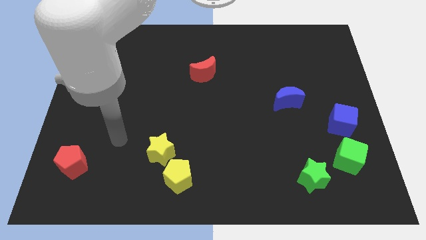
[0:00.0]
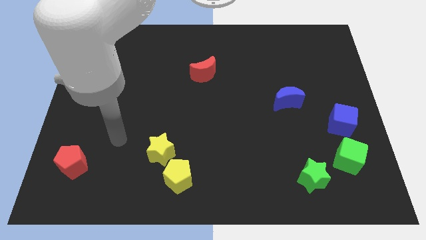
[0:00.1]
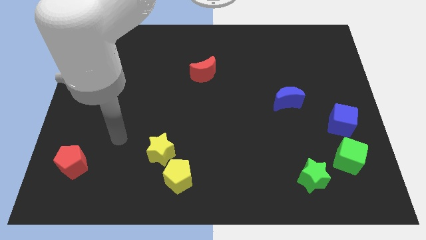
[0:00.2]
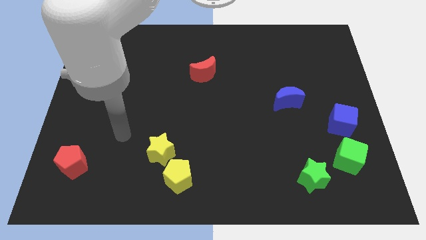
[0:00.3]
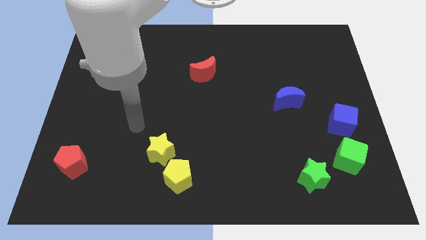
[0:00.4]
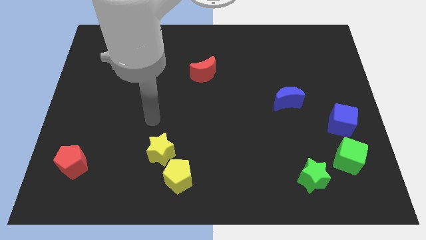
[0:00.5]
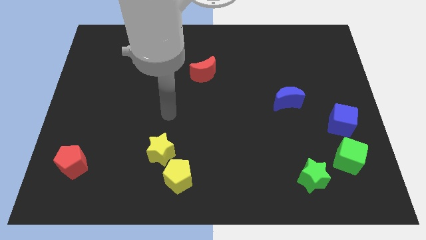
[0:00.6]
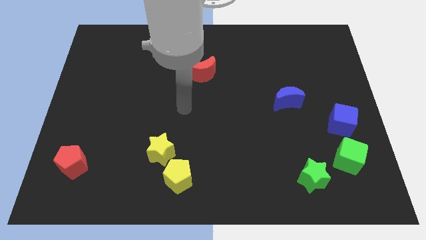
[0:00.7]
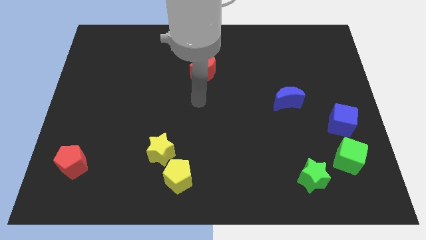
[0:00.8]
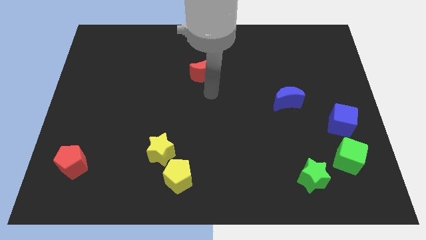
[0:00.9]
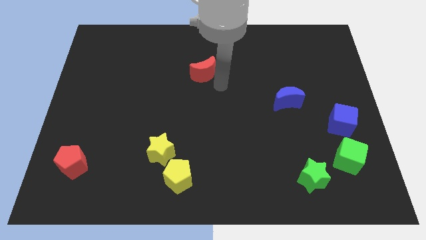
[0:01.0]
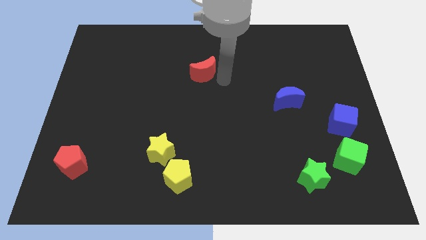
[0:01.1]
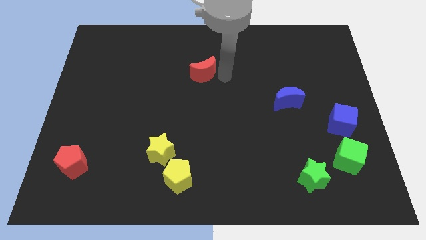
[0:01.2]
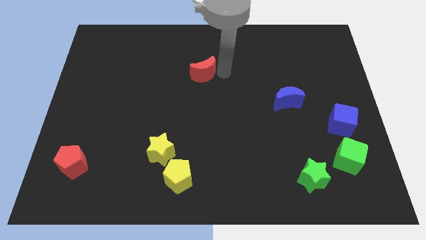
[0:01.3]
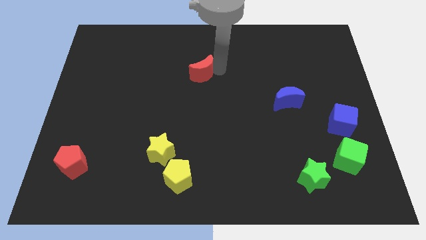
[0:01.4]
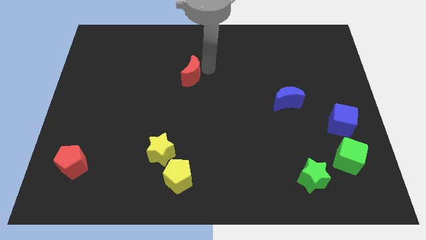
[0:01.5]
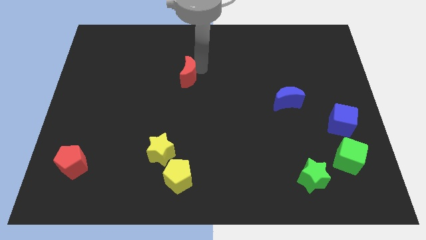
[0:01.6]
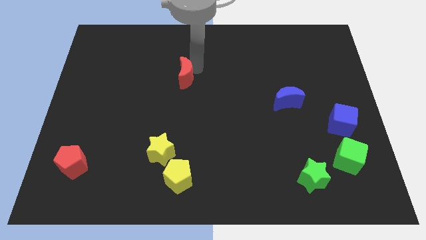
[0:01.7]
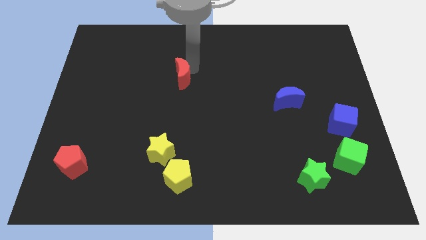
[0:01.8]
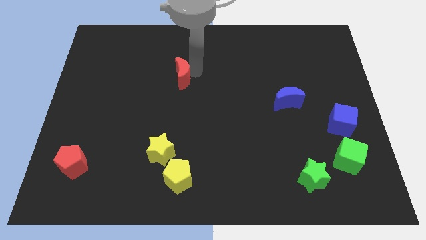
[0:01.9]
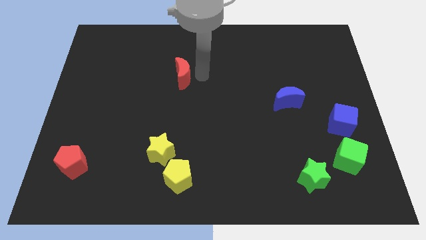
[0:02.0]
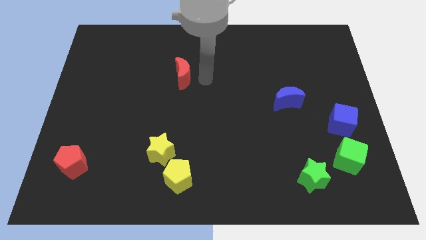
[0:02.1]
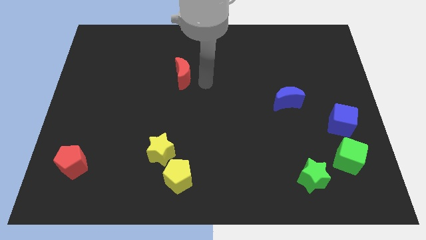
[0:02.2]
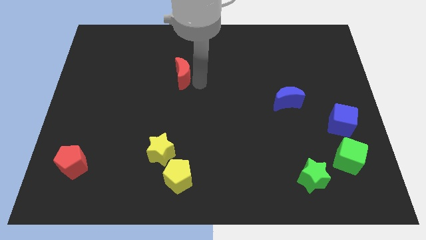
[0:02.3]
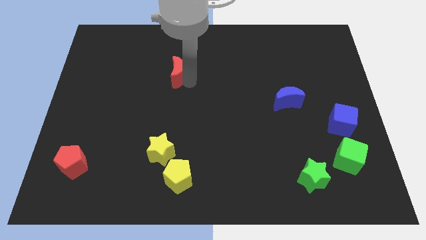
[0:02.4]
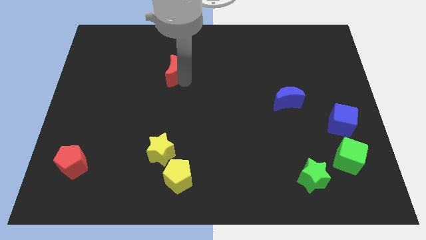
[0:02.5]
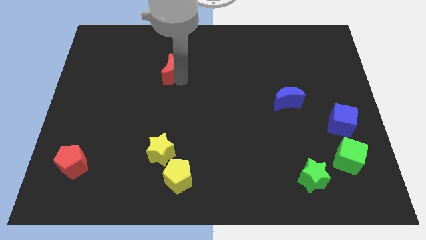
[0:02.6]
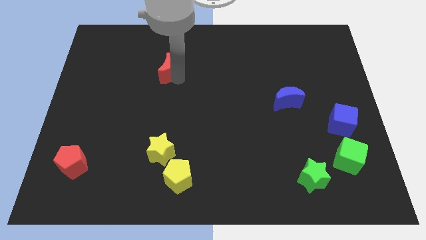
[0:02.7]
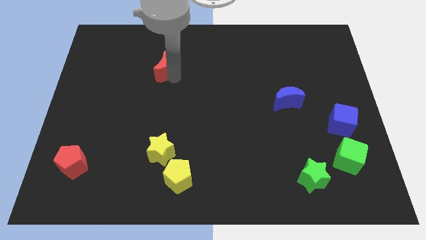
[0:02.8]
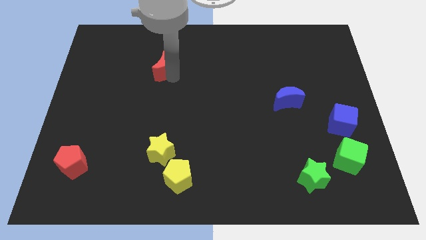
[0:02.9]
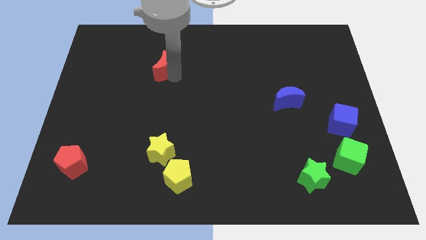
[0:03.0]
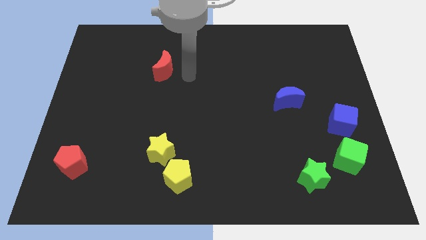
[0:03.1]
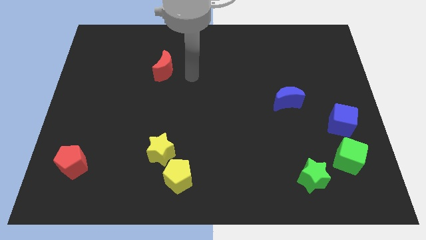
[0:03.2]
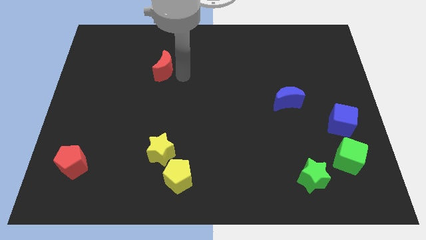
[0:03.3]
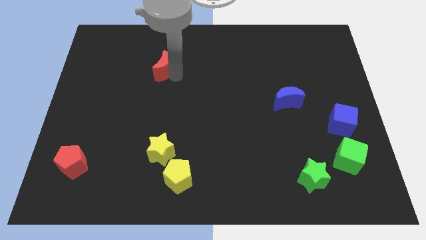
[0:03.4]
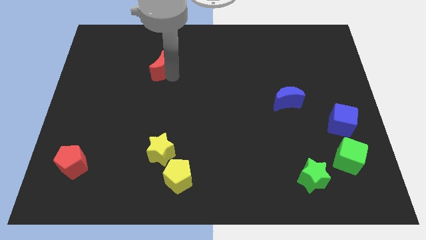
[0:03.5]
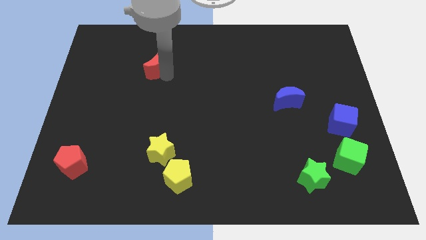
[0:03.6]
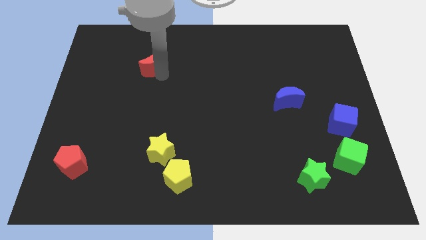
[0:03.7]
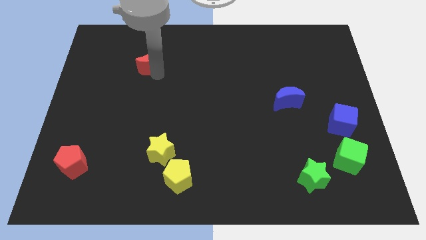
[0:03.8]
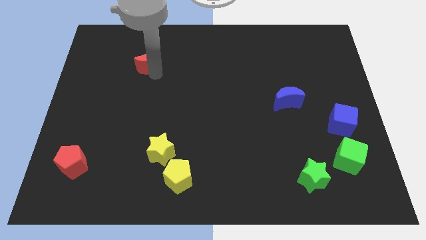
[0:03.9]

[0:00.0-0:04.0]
move the red crescent diagonal to the green star

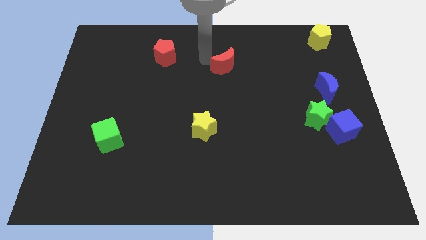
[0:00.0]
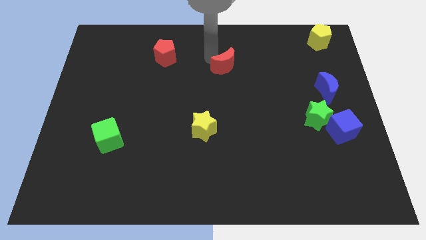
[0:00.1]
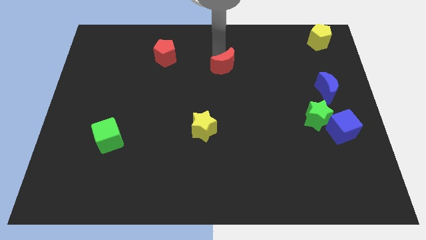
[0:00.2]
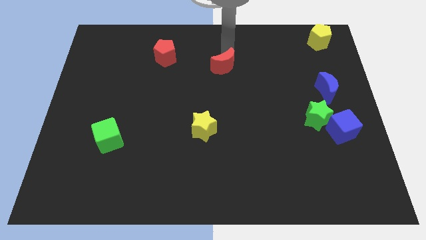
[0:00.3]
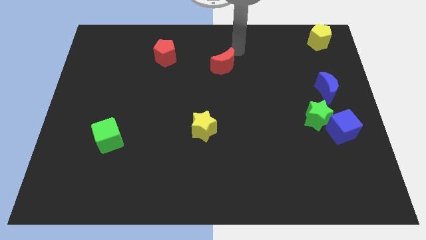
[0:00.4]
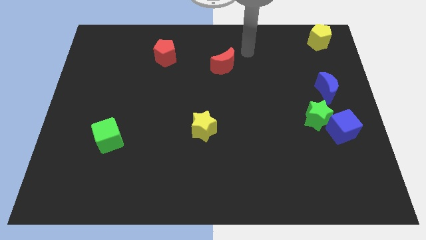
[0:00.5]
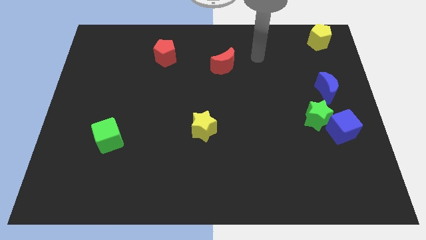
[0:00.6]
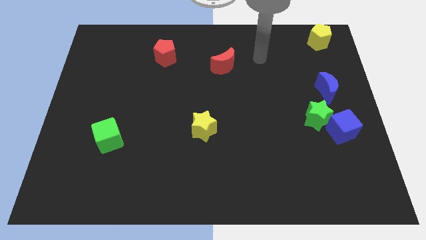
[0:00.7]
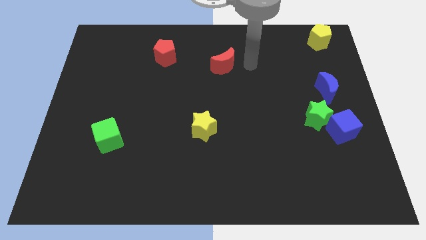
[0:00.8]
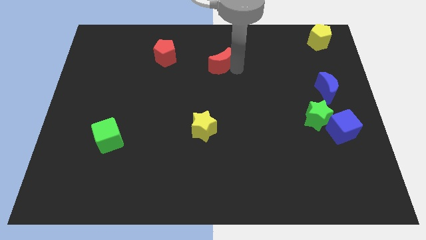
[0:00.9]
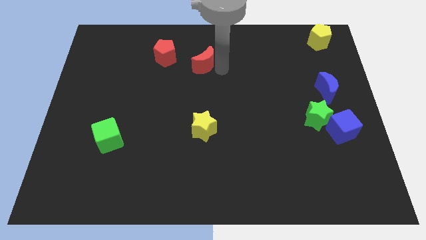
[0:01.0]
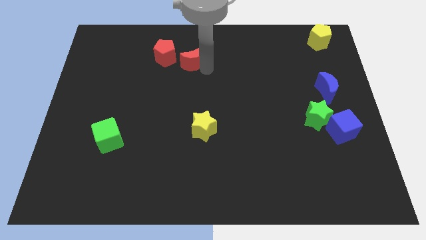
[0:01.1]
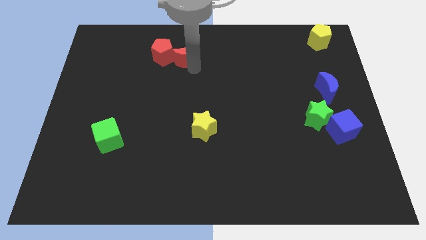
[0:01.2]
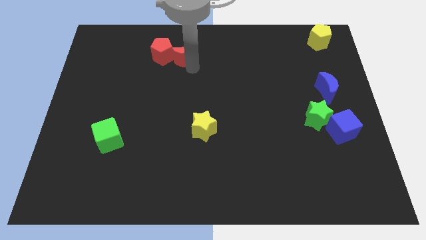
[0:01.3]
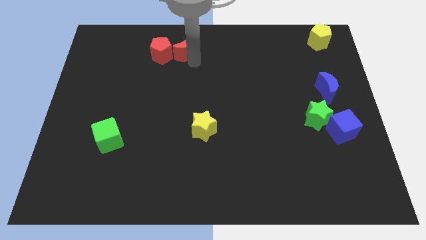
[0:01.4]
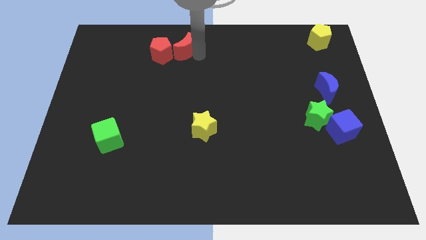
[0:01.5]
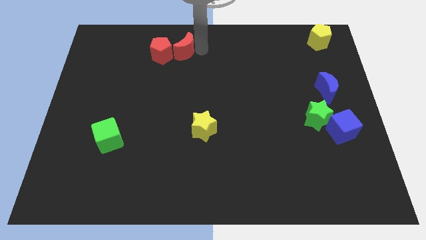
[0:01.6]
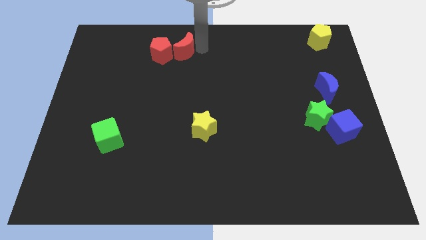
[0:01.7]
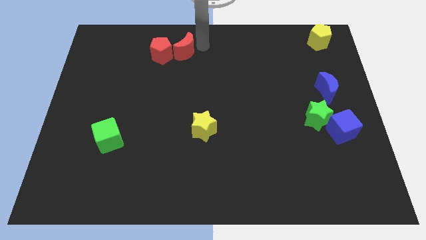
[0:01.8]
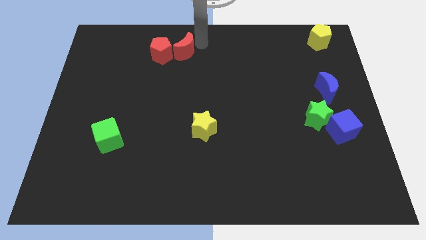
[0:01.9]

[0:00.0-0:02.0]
push the red moon close to the red pentagon

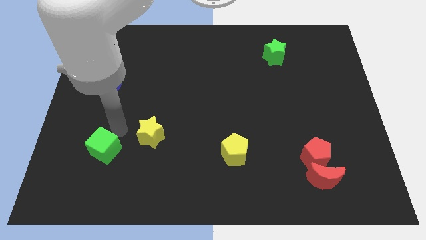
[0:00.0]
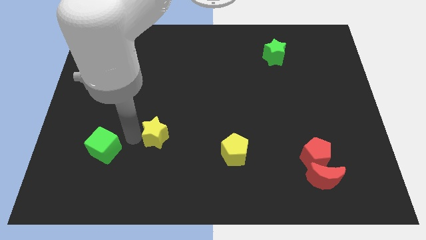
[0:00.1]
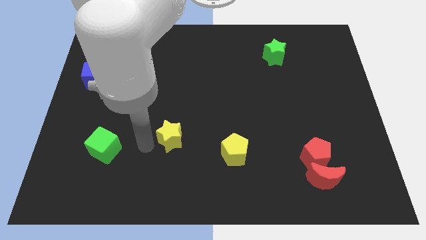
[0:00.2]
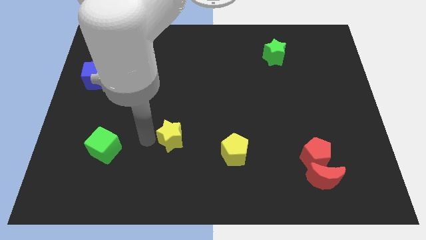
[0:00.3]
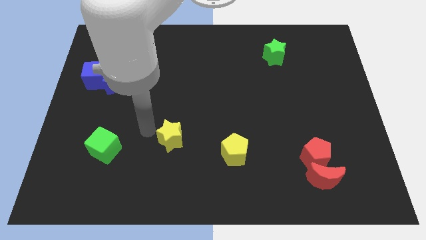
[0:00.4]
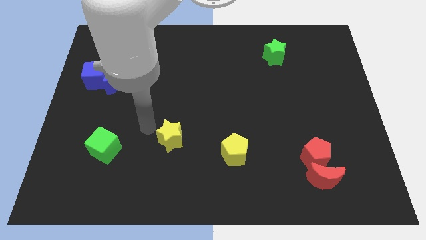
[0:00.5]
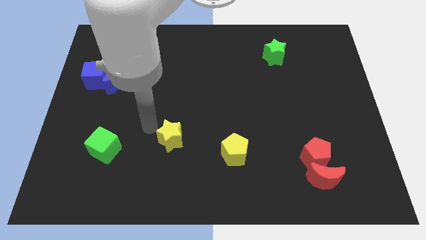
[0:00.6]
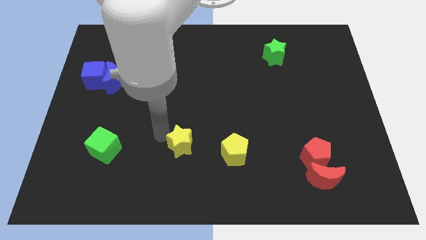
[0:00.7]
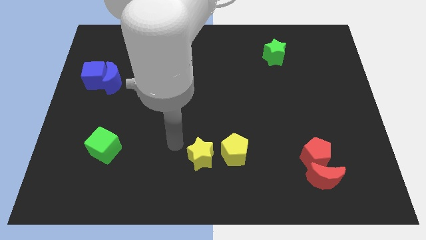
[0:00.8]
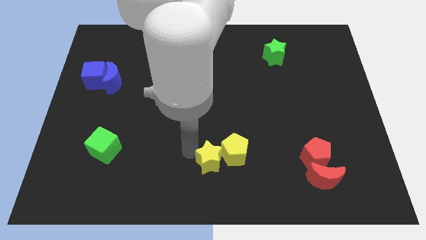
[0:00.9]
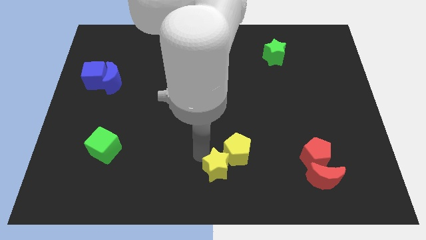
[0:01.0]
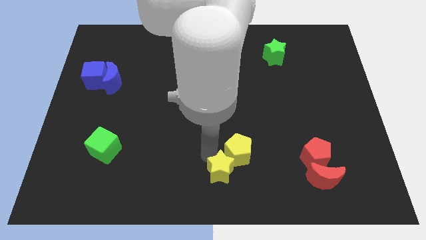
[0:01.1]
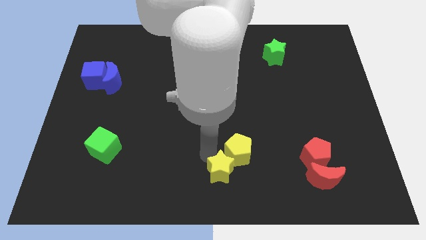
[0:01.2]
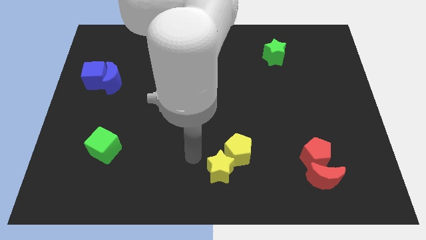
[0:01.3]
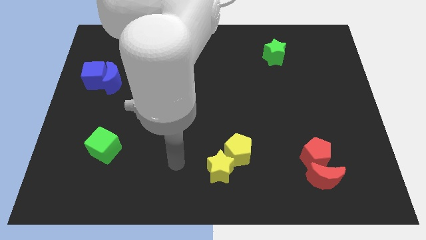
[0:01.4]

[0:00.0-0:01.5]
push the yellow star to the bottom left of the yellow pentagon

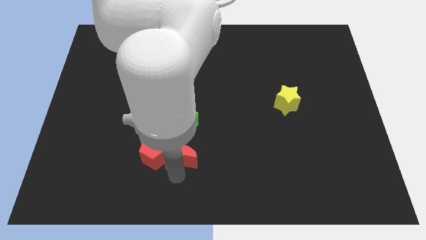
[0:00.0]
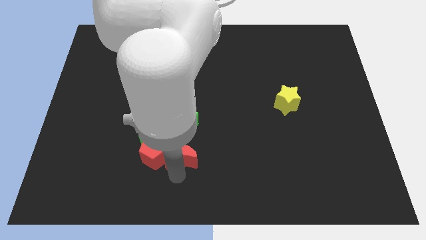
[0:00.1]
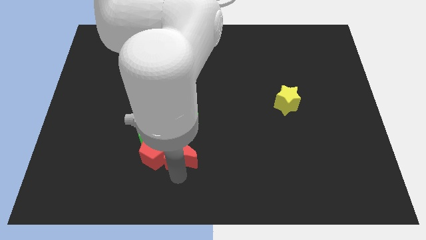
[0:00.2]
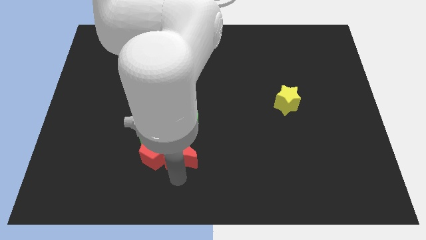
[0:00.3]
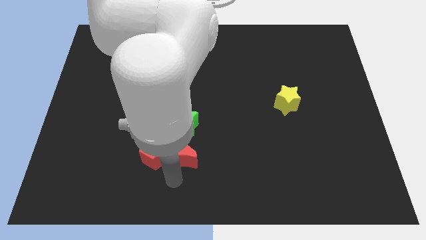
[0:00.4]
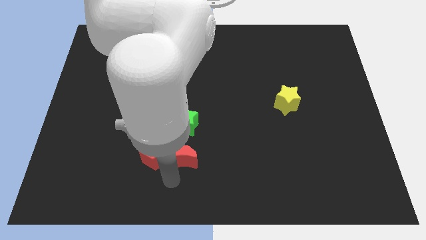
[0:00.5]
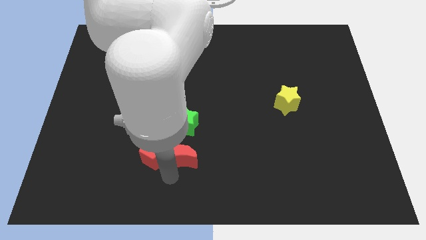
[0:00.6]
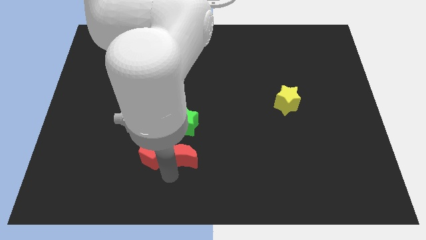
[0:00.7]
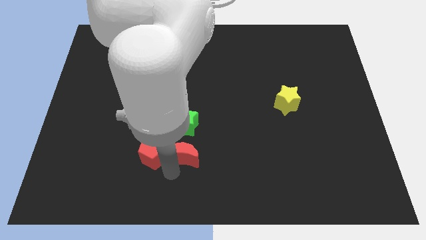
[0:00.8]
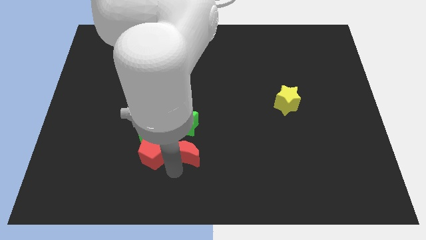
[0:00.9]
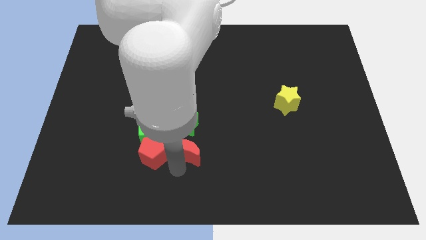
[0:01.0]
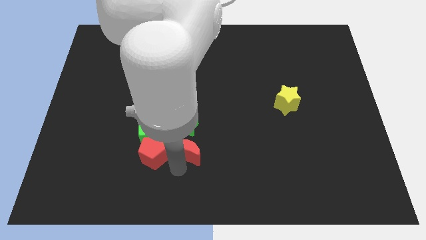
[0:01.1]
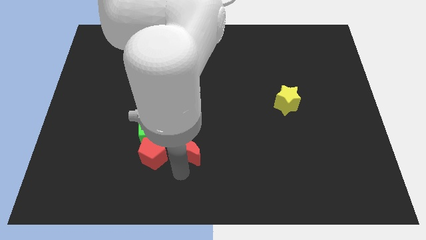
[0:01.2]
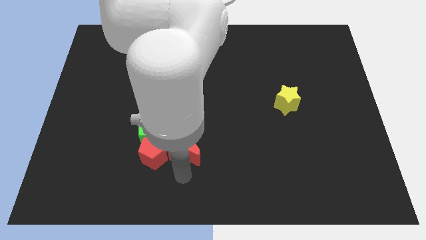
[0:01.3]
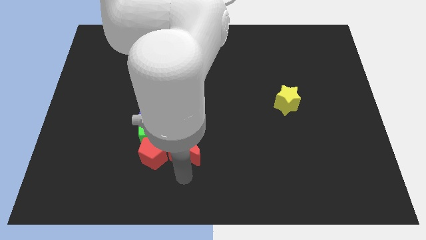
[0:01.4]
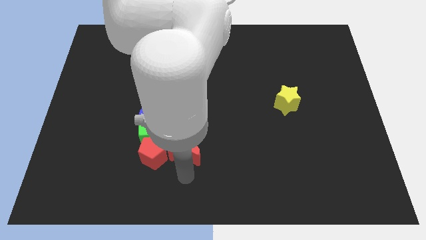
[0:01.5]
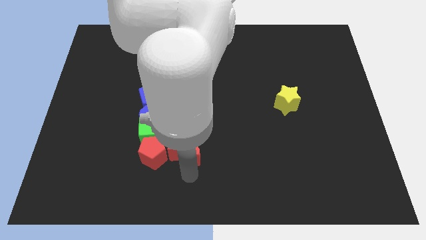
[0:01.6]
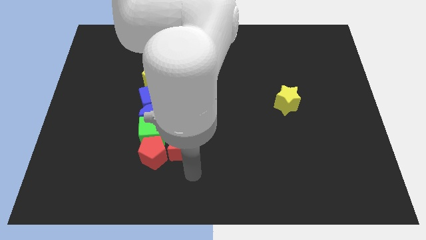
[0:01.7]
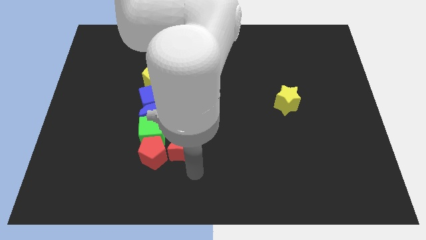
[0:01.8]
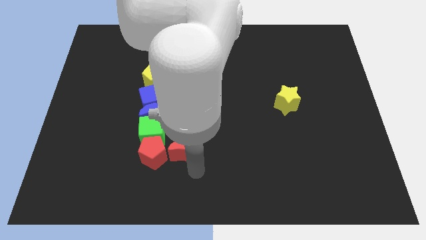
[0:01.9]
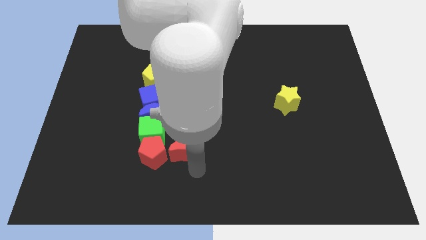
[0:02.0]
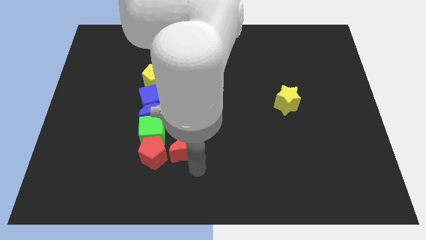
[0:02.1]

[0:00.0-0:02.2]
move red moon slightly up
